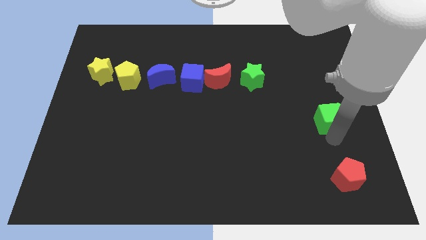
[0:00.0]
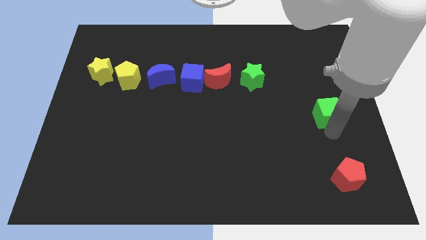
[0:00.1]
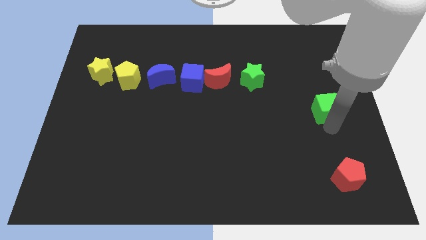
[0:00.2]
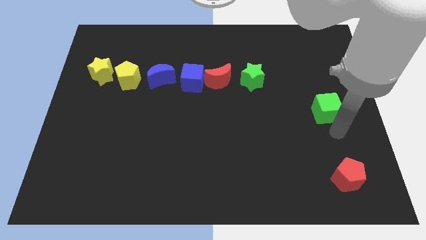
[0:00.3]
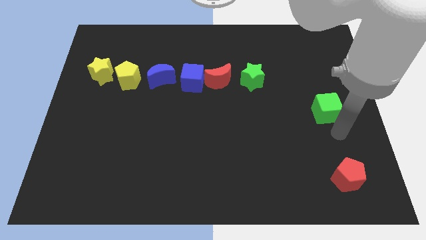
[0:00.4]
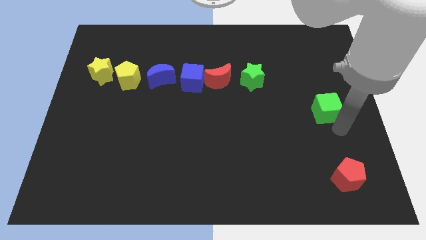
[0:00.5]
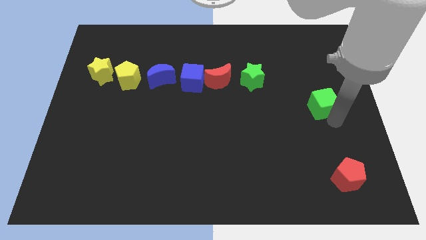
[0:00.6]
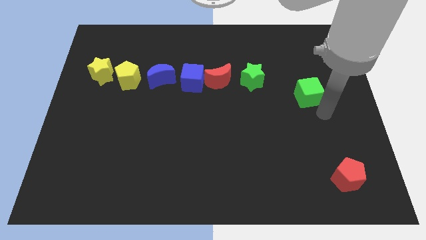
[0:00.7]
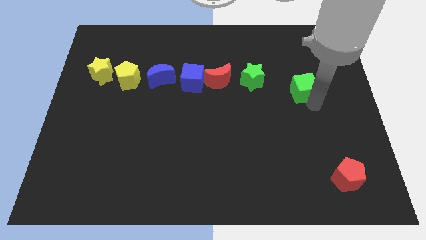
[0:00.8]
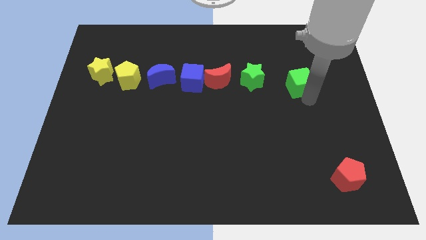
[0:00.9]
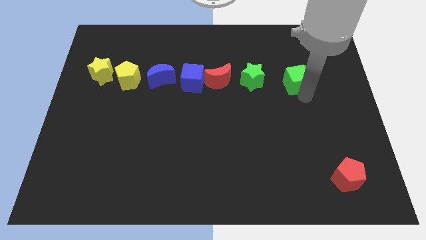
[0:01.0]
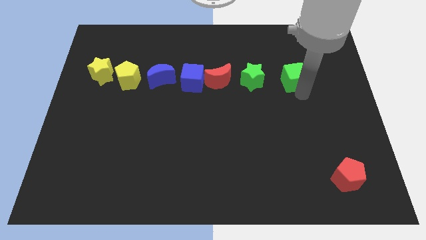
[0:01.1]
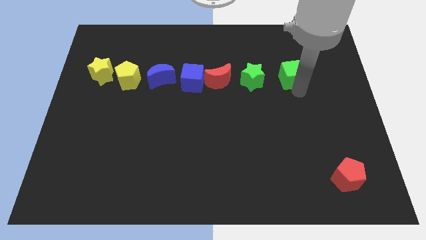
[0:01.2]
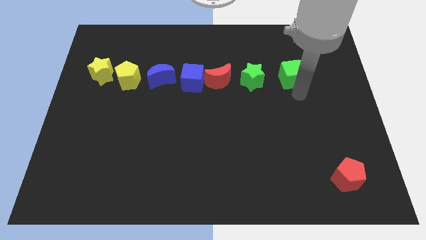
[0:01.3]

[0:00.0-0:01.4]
place the green cube right to the green star

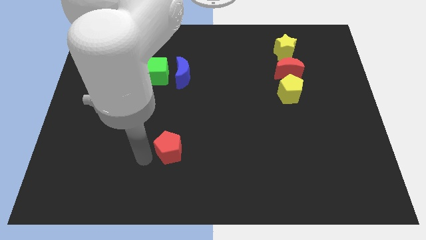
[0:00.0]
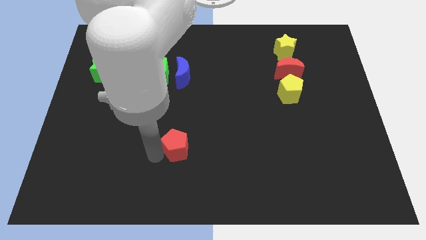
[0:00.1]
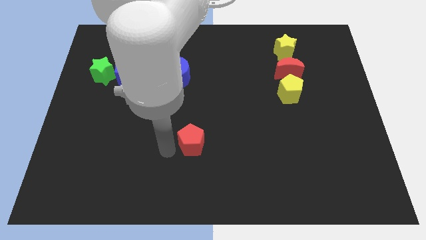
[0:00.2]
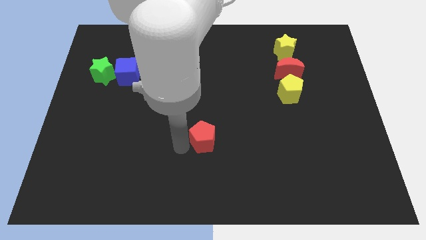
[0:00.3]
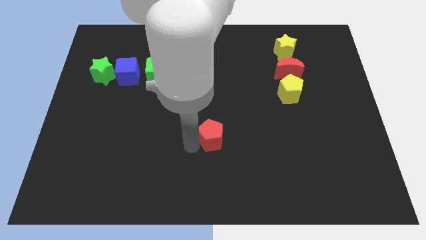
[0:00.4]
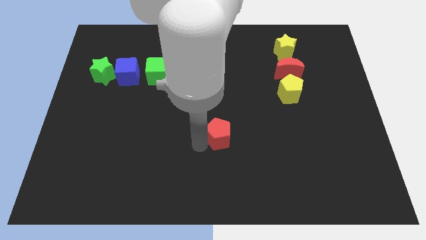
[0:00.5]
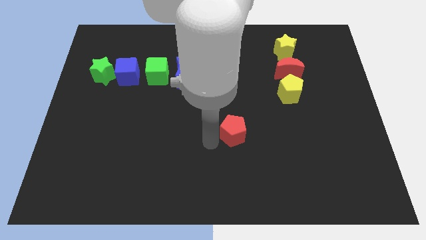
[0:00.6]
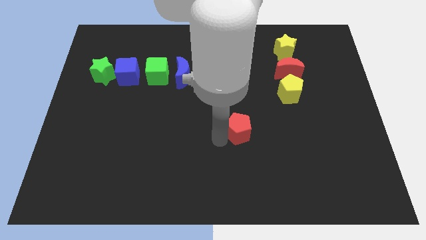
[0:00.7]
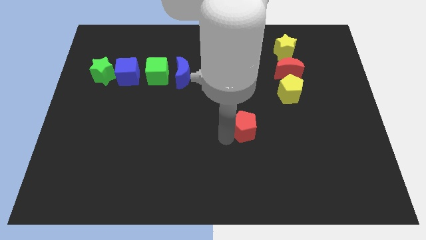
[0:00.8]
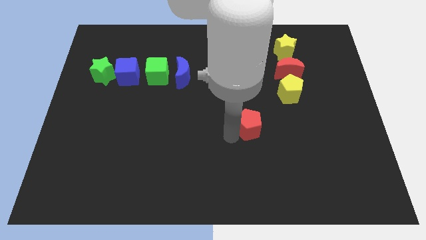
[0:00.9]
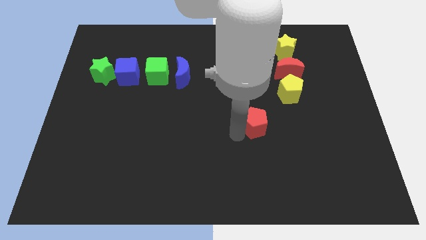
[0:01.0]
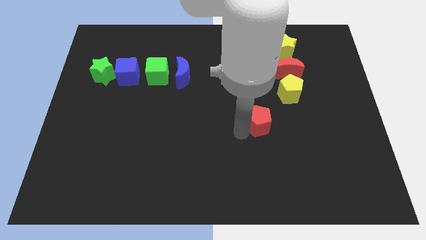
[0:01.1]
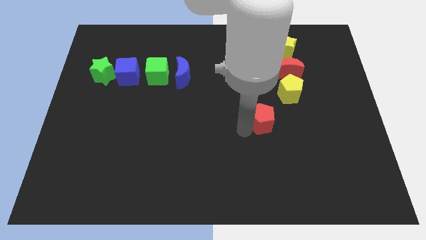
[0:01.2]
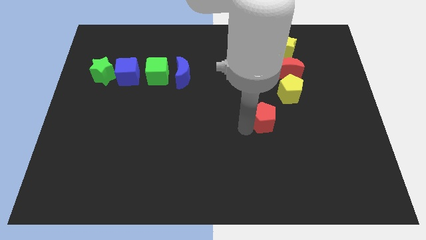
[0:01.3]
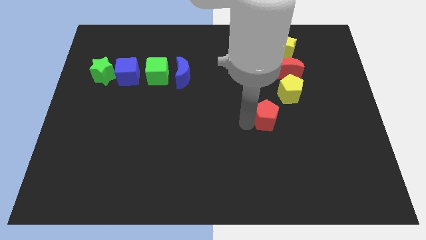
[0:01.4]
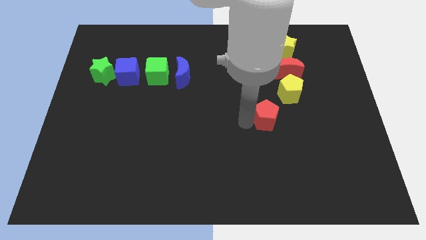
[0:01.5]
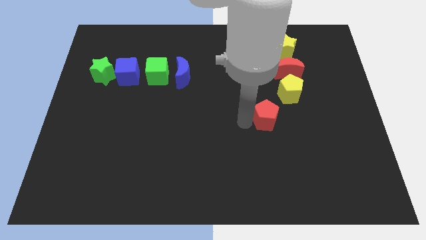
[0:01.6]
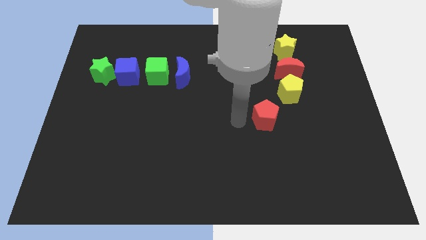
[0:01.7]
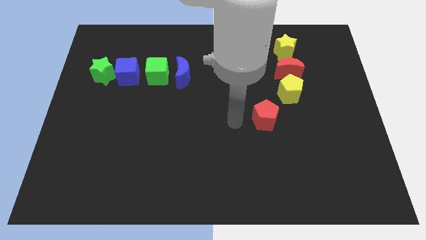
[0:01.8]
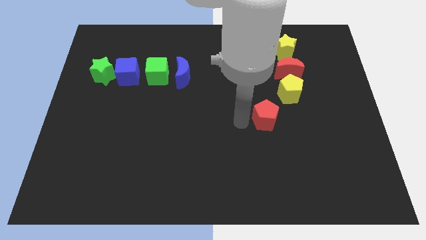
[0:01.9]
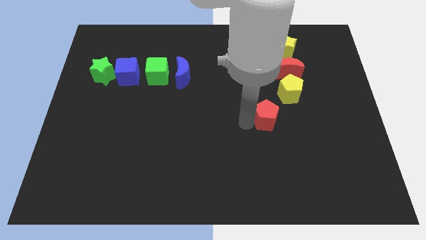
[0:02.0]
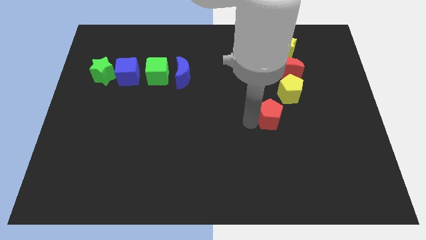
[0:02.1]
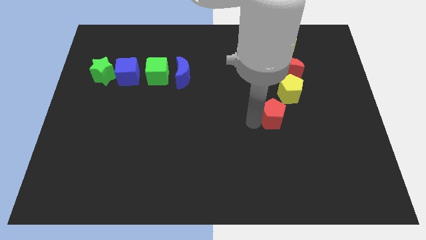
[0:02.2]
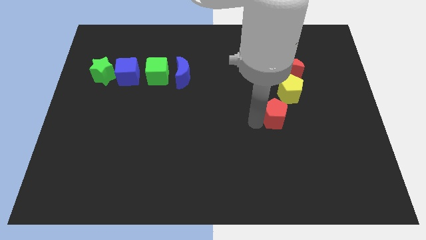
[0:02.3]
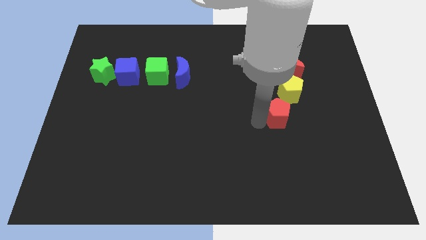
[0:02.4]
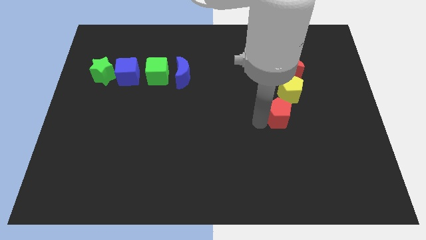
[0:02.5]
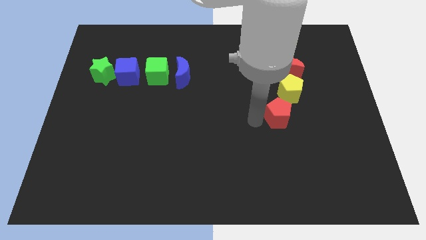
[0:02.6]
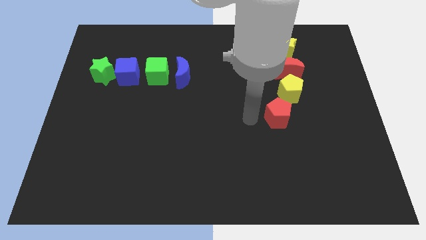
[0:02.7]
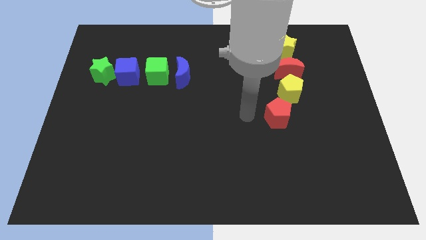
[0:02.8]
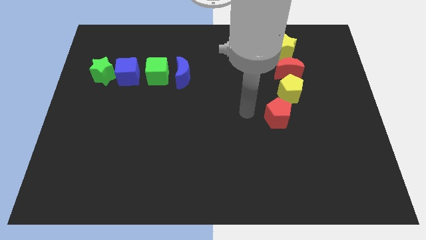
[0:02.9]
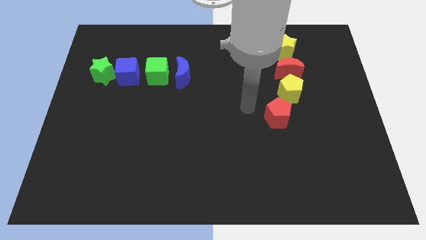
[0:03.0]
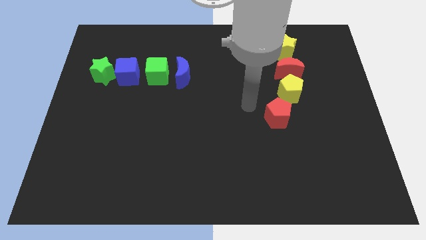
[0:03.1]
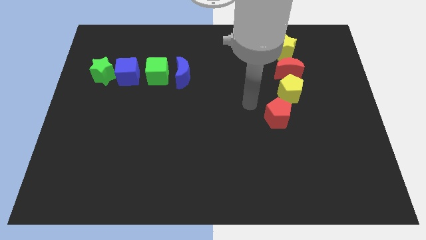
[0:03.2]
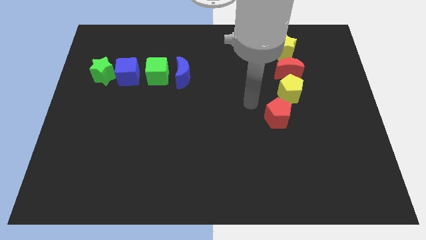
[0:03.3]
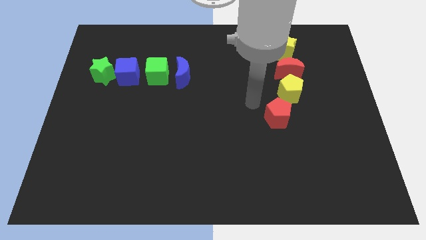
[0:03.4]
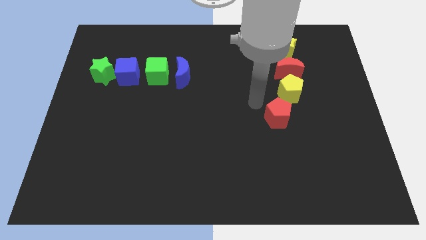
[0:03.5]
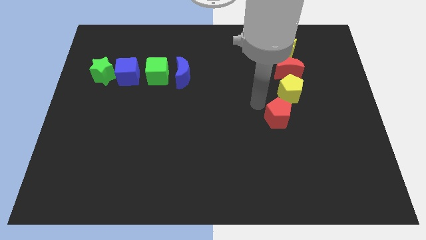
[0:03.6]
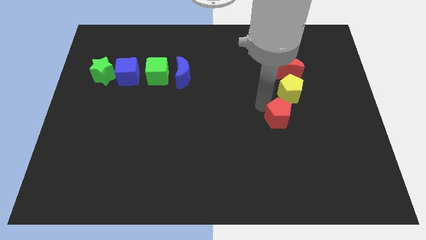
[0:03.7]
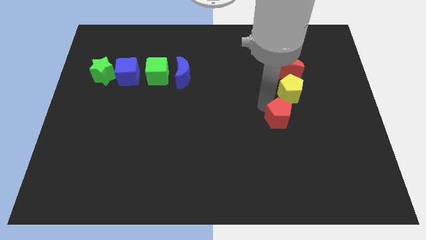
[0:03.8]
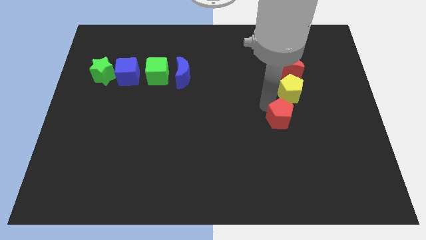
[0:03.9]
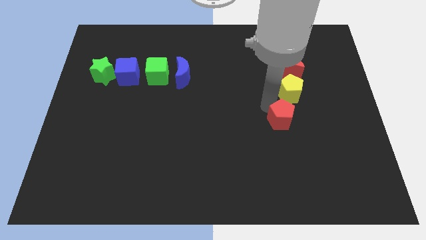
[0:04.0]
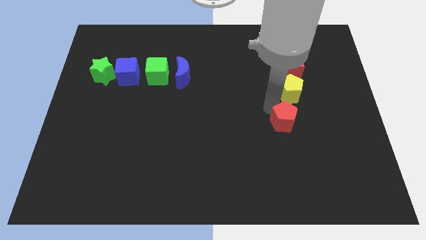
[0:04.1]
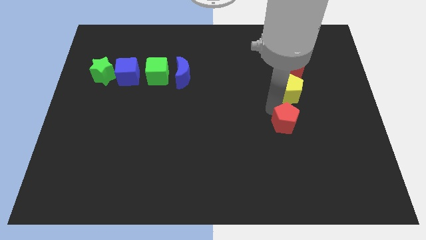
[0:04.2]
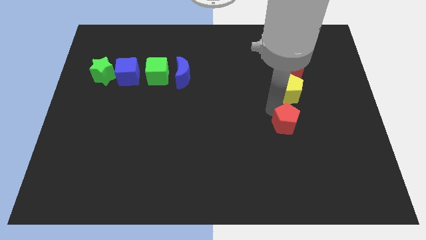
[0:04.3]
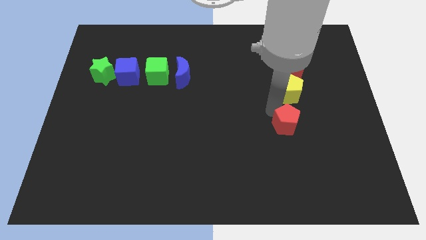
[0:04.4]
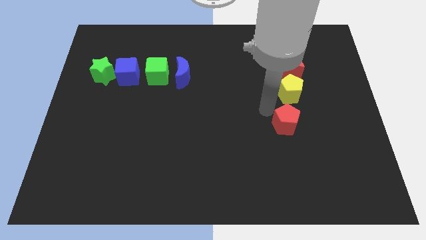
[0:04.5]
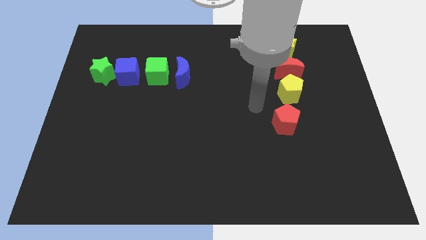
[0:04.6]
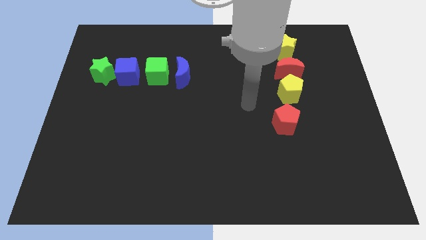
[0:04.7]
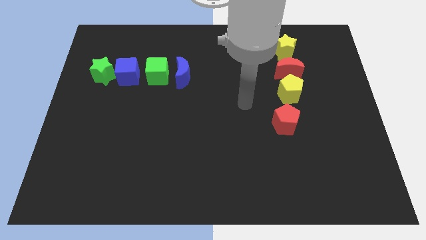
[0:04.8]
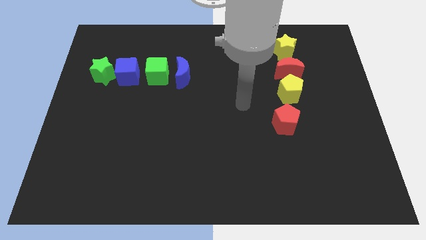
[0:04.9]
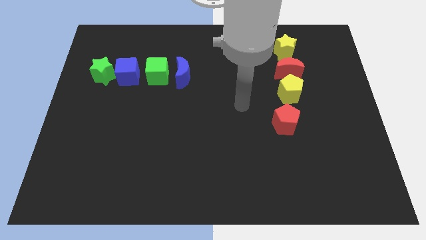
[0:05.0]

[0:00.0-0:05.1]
move the red pentagon down to the yellow pentagon

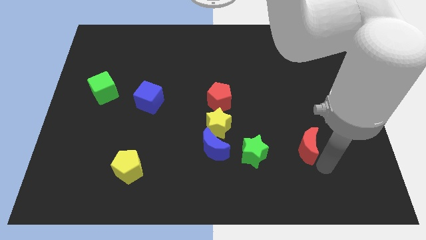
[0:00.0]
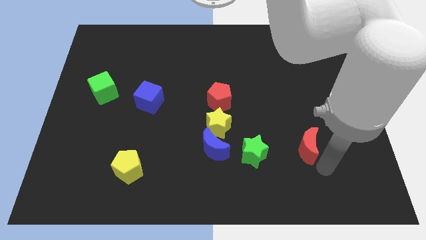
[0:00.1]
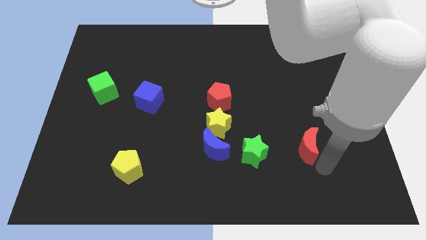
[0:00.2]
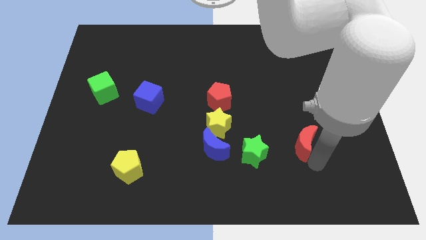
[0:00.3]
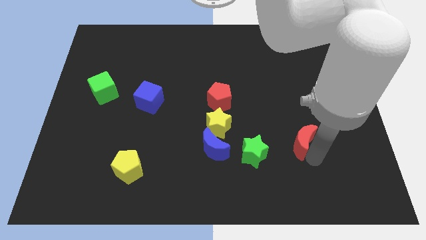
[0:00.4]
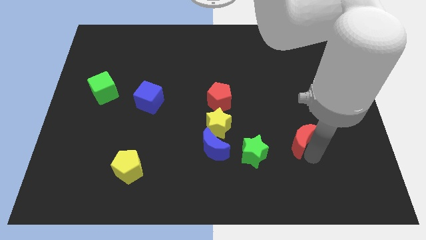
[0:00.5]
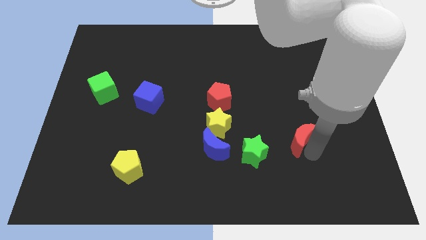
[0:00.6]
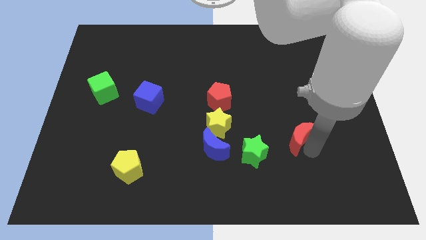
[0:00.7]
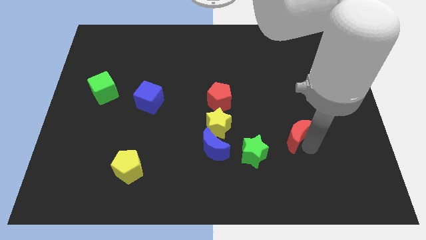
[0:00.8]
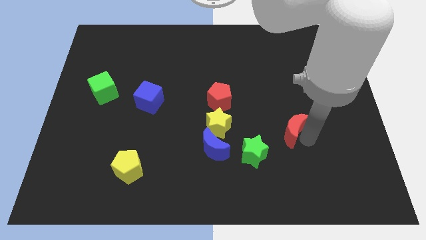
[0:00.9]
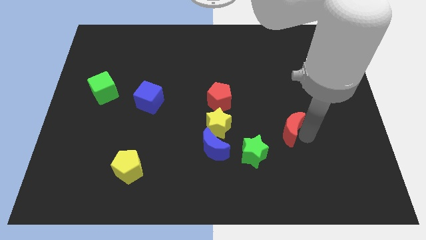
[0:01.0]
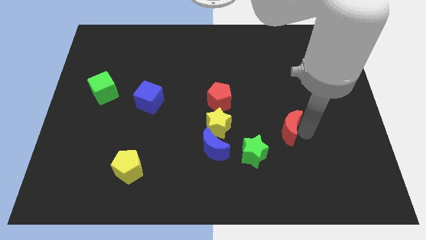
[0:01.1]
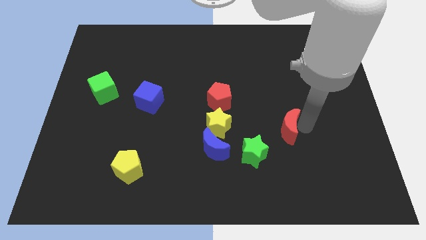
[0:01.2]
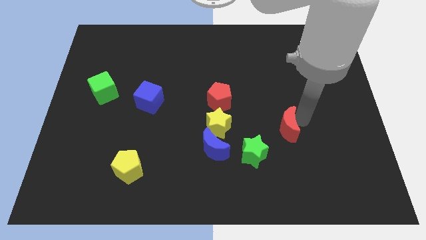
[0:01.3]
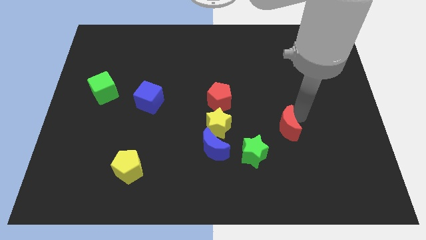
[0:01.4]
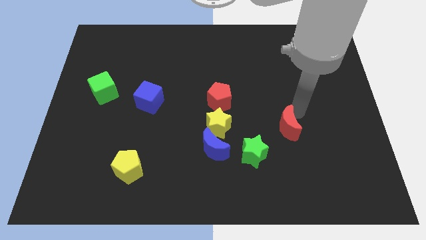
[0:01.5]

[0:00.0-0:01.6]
place red moon to the top right of green star

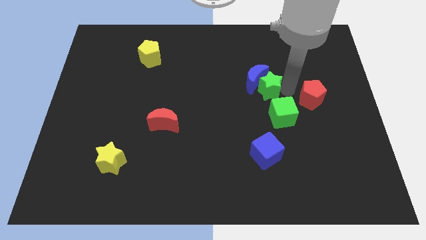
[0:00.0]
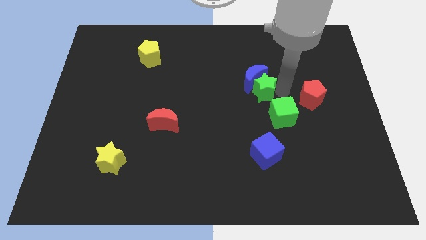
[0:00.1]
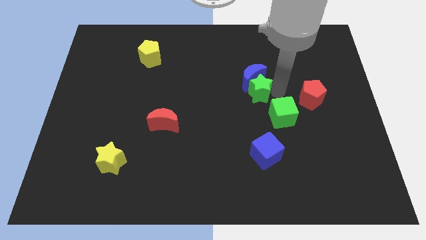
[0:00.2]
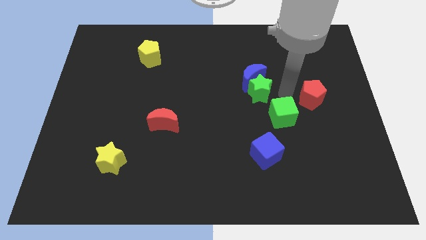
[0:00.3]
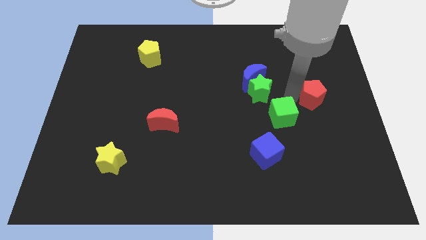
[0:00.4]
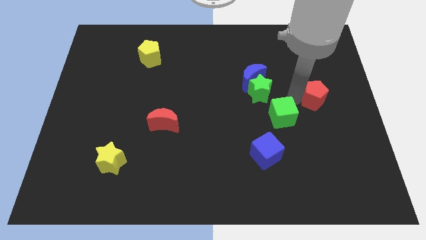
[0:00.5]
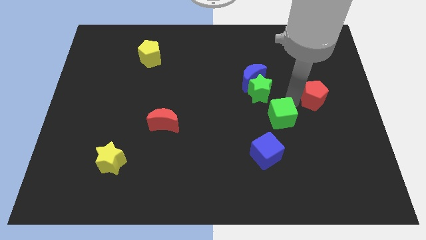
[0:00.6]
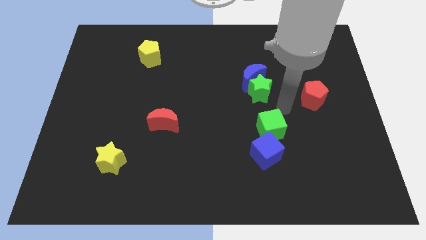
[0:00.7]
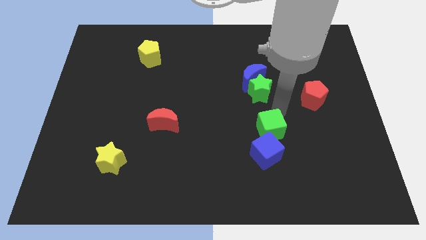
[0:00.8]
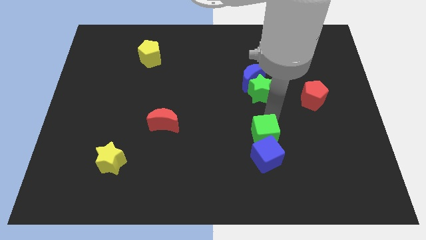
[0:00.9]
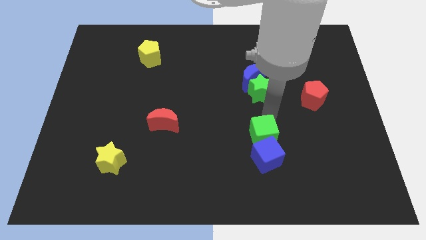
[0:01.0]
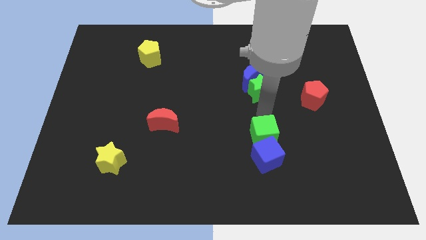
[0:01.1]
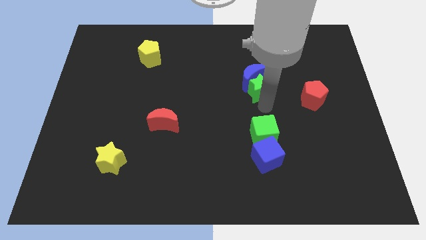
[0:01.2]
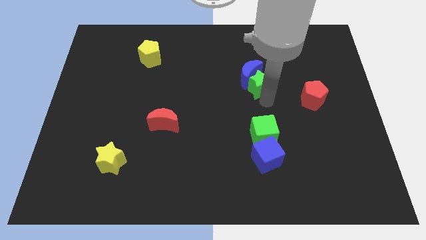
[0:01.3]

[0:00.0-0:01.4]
push the green cube into the blue cube
